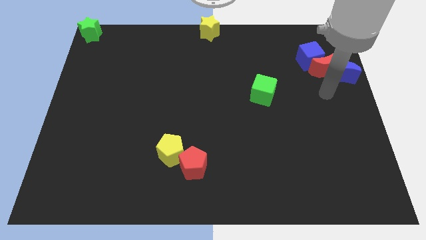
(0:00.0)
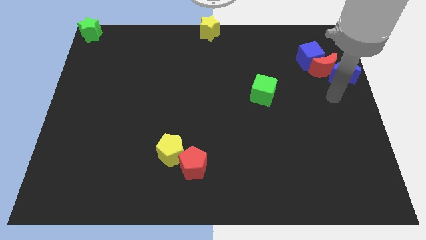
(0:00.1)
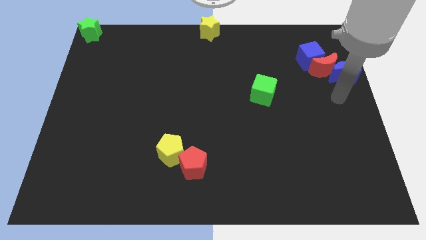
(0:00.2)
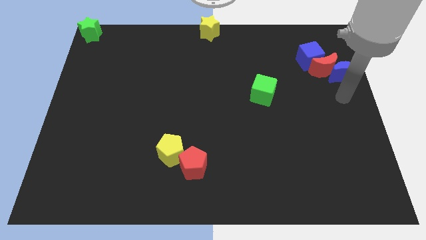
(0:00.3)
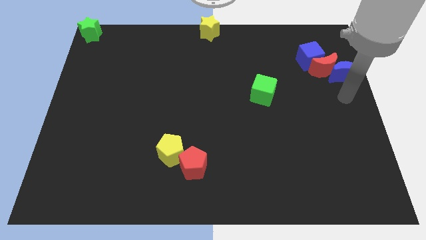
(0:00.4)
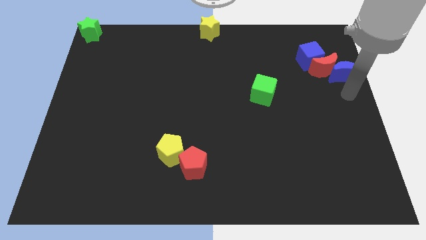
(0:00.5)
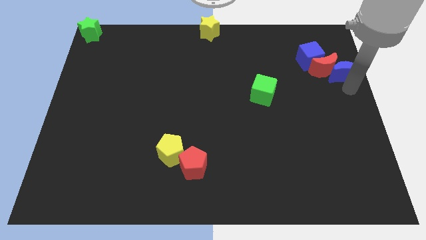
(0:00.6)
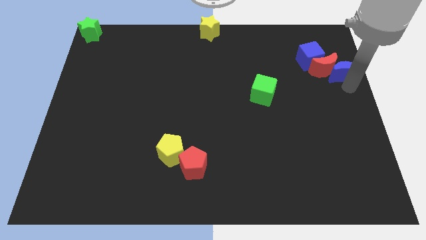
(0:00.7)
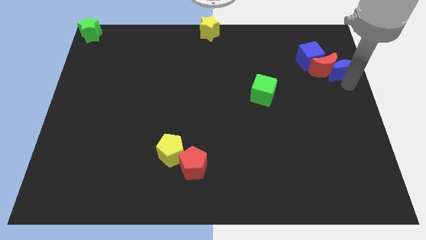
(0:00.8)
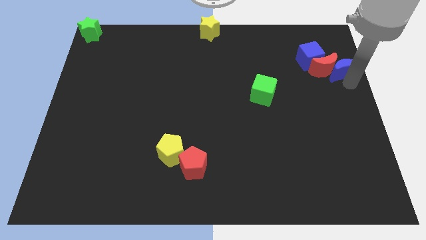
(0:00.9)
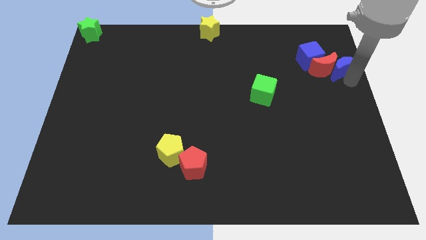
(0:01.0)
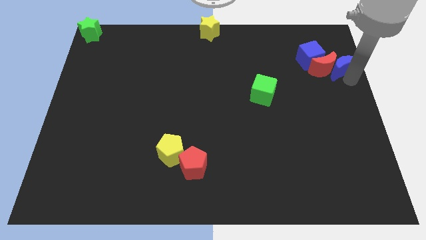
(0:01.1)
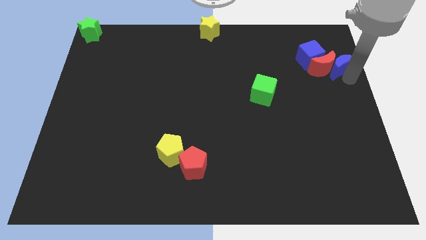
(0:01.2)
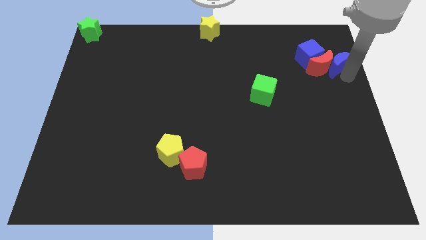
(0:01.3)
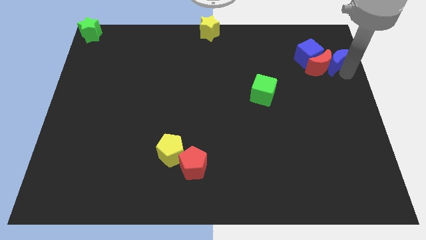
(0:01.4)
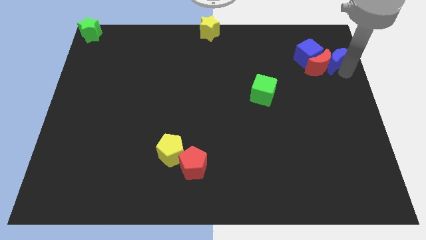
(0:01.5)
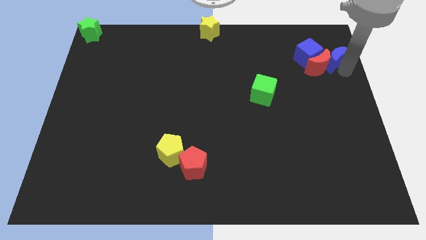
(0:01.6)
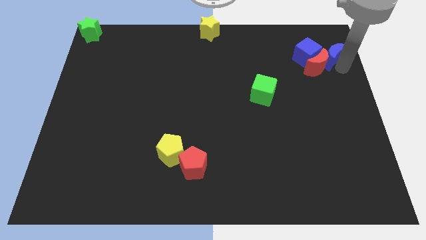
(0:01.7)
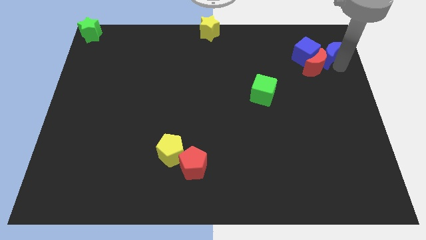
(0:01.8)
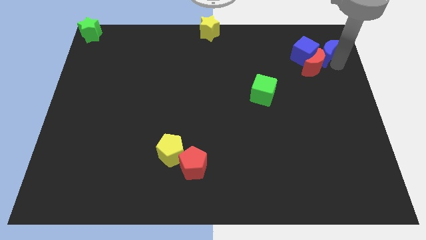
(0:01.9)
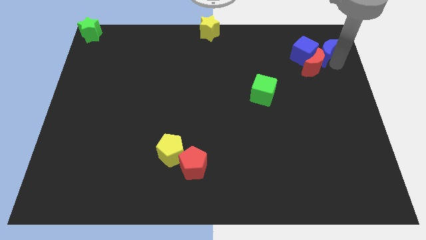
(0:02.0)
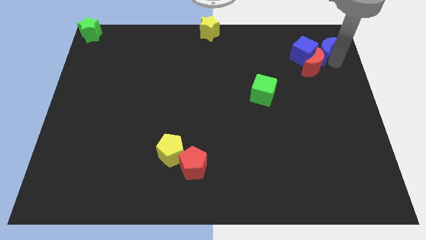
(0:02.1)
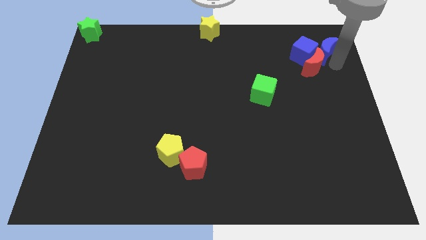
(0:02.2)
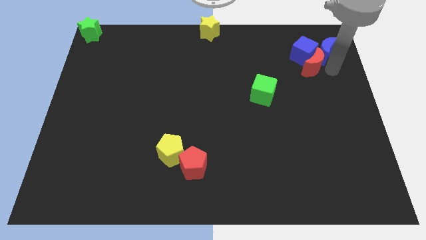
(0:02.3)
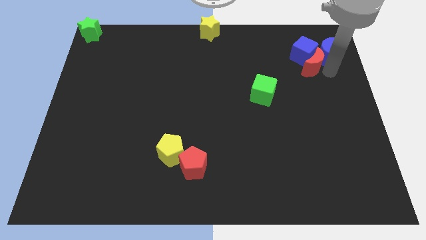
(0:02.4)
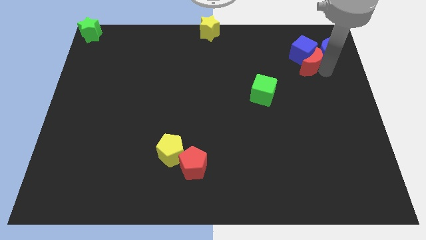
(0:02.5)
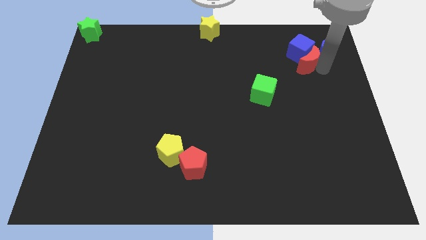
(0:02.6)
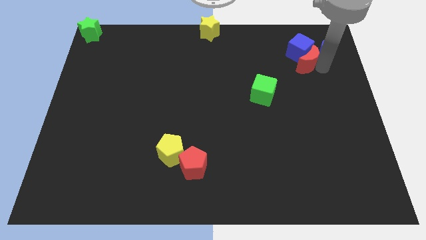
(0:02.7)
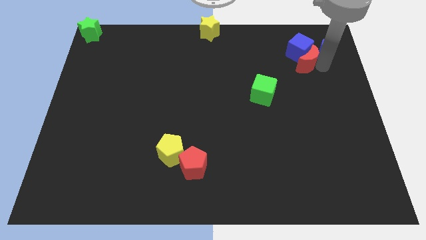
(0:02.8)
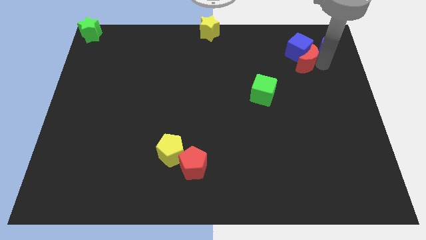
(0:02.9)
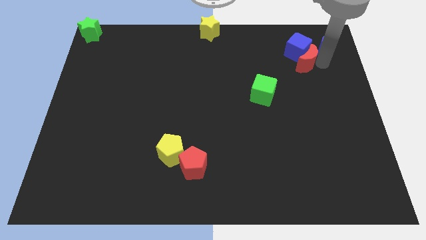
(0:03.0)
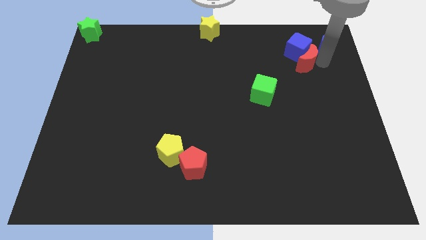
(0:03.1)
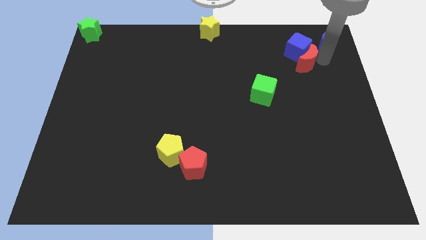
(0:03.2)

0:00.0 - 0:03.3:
move red moon blue moon to the upward

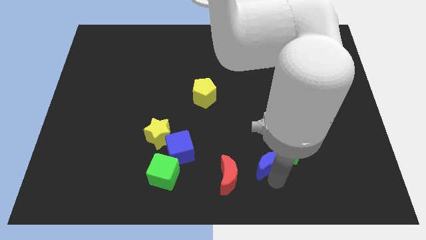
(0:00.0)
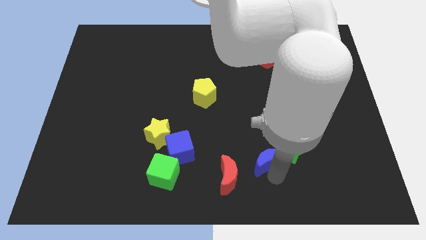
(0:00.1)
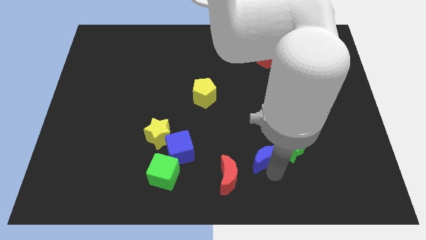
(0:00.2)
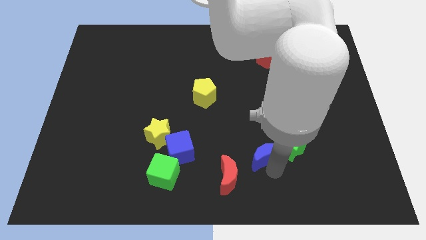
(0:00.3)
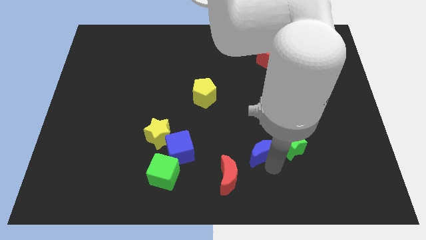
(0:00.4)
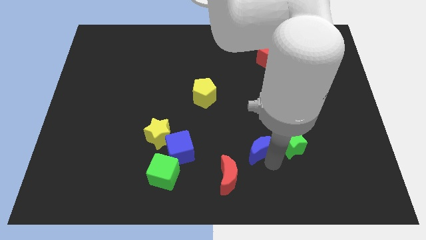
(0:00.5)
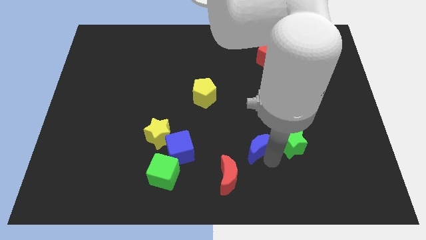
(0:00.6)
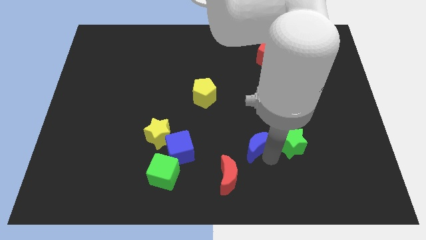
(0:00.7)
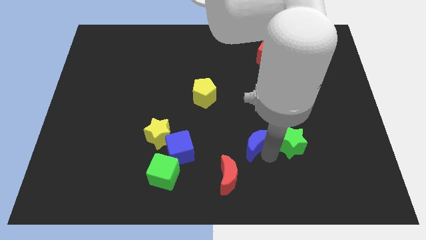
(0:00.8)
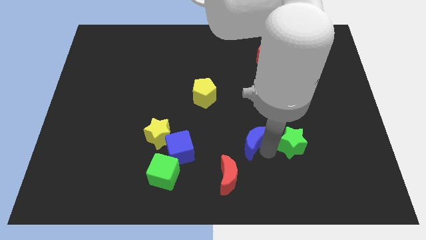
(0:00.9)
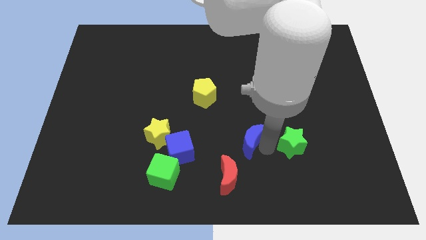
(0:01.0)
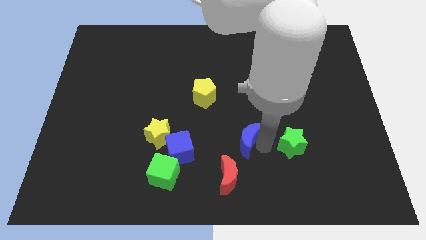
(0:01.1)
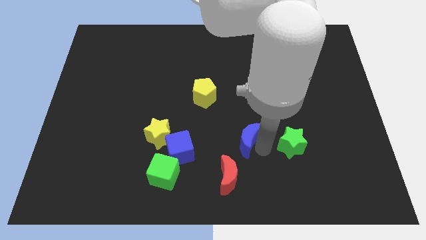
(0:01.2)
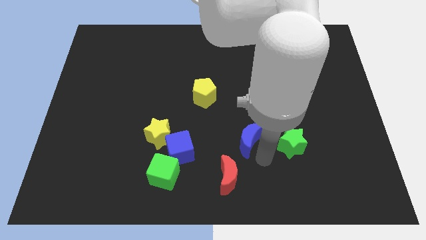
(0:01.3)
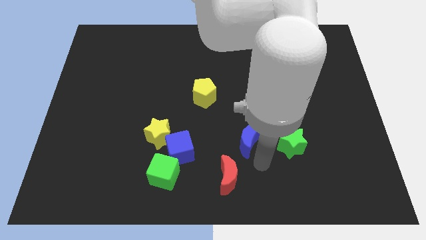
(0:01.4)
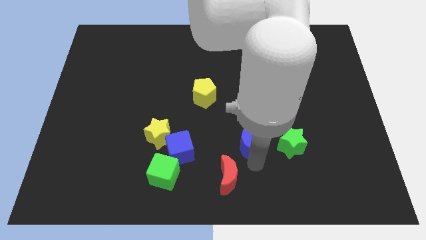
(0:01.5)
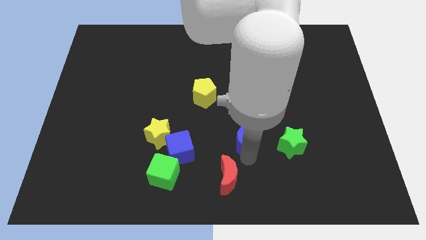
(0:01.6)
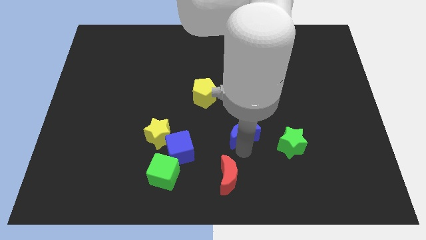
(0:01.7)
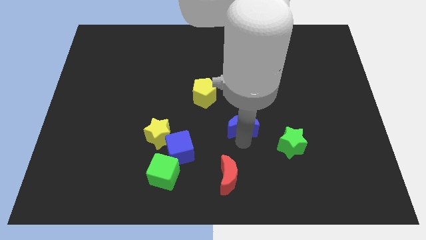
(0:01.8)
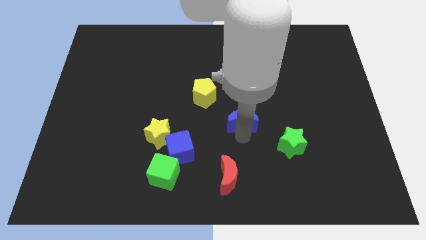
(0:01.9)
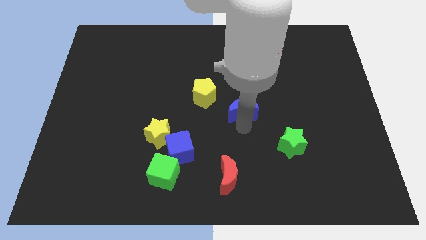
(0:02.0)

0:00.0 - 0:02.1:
place the blue moon in between the green star and yellow pentagon

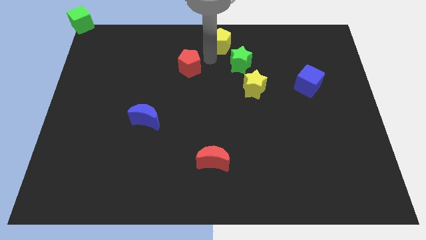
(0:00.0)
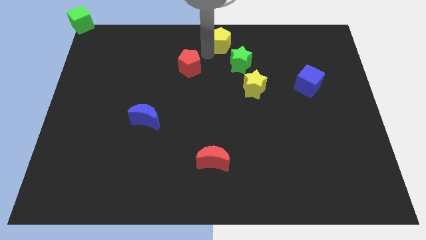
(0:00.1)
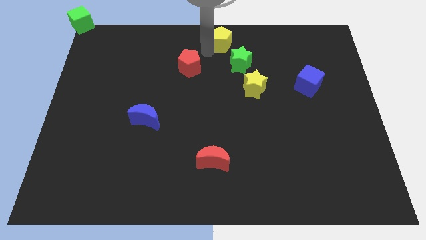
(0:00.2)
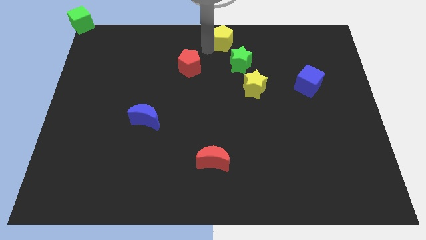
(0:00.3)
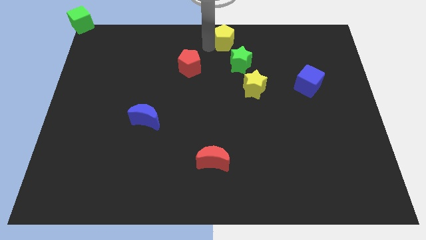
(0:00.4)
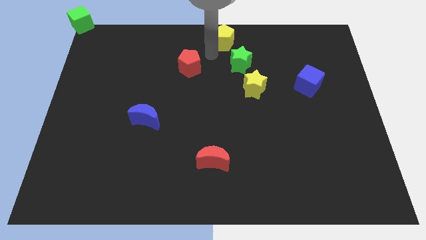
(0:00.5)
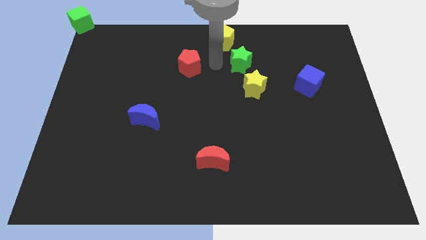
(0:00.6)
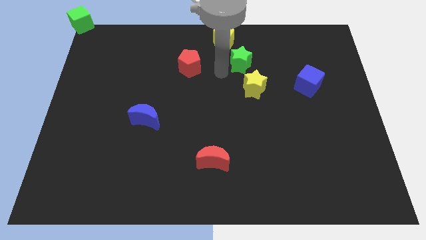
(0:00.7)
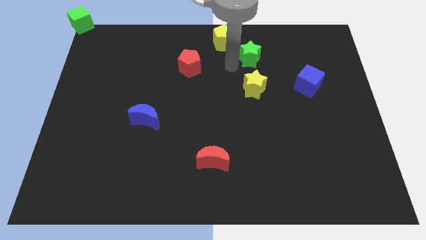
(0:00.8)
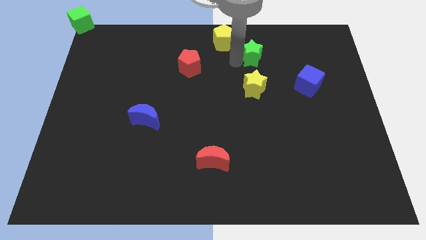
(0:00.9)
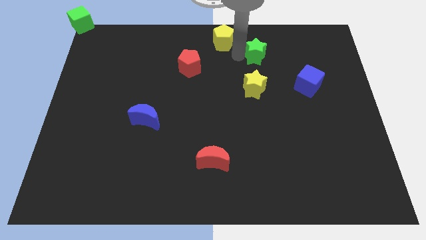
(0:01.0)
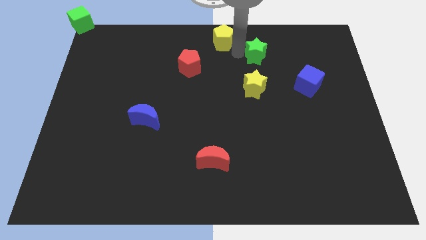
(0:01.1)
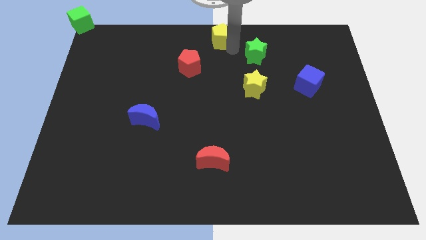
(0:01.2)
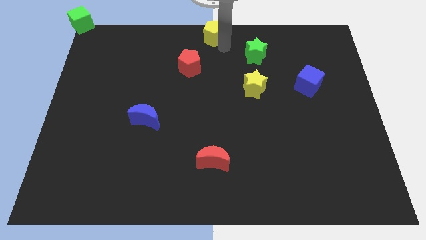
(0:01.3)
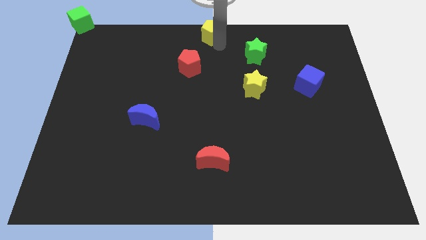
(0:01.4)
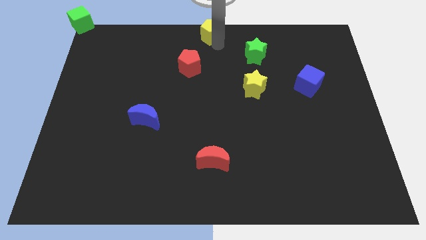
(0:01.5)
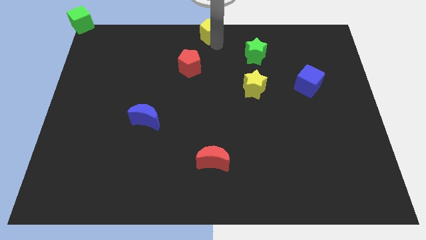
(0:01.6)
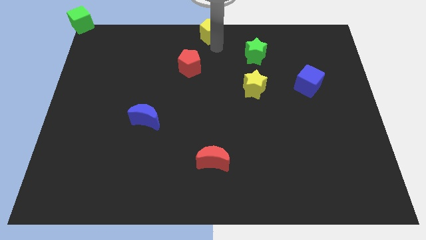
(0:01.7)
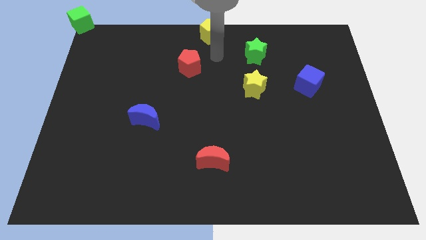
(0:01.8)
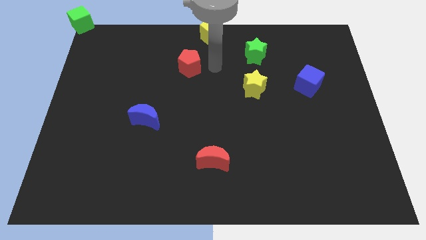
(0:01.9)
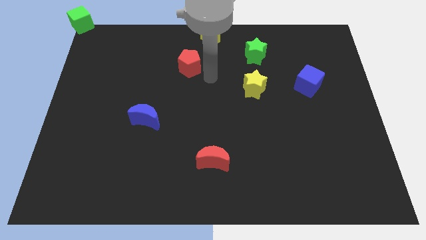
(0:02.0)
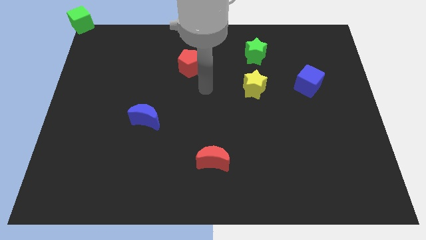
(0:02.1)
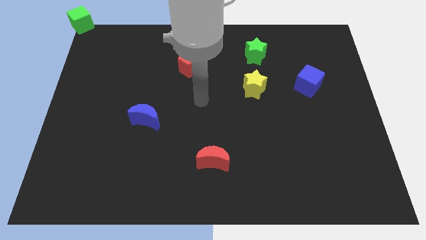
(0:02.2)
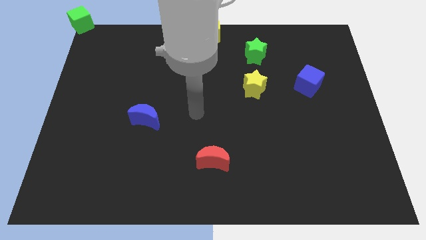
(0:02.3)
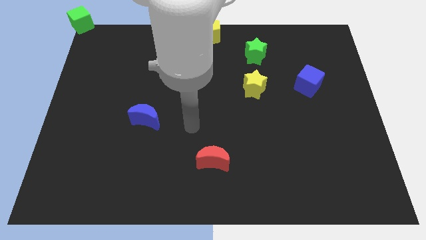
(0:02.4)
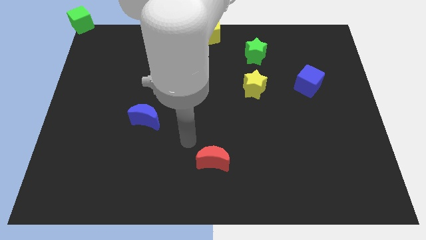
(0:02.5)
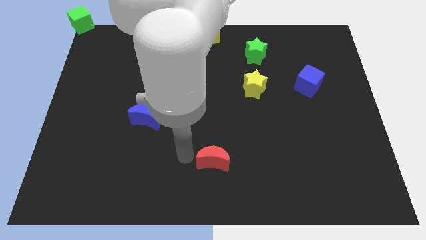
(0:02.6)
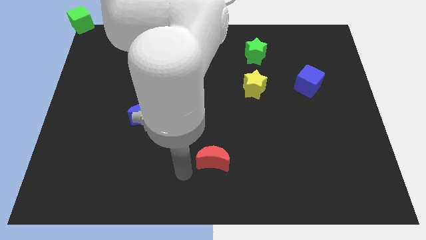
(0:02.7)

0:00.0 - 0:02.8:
push the yellow pentagon towards the top center of the board

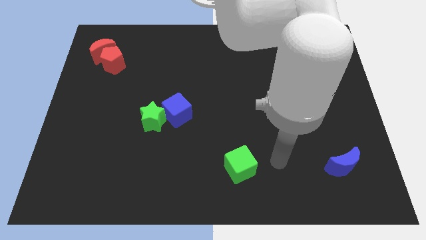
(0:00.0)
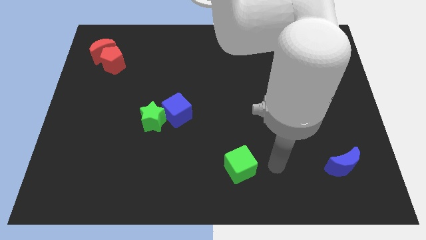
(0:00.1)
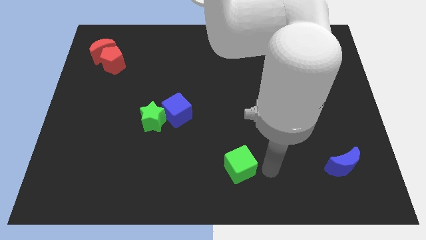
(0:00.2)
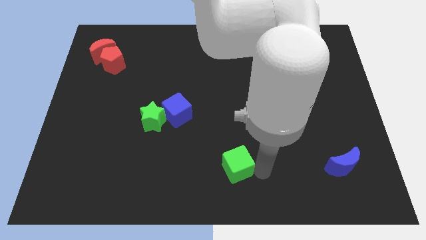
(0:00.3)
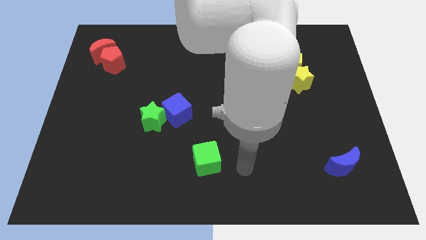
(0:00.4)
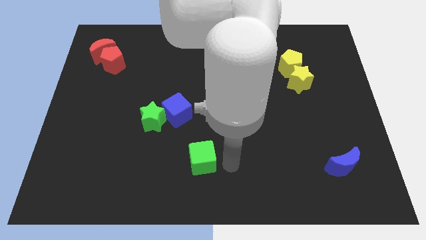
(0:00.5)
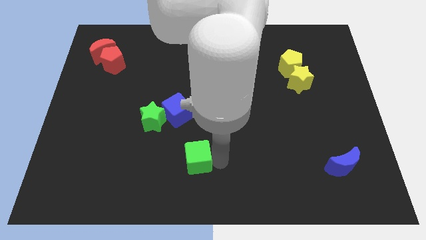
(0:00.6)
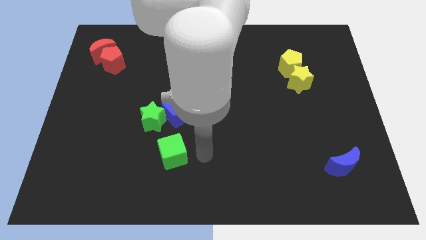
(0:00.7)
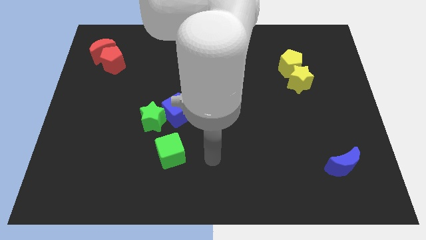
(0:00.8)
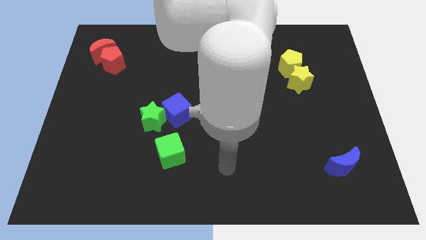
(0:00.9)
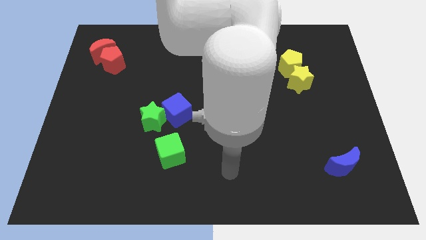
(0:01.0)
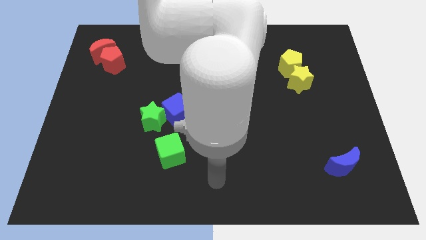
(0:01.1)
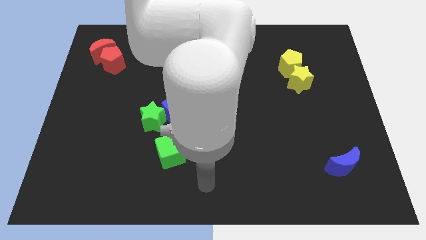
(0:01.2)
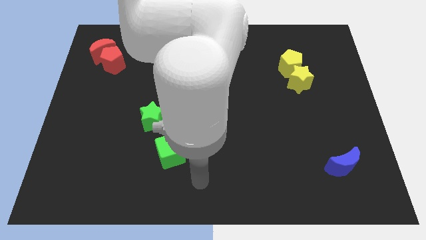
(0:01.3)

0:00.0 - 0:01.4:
move the green cube into green star
